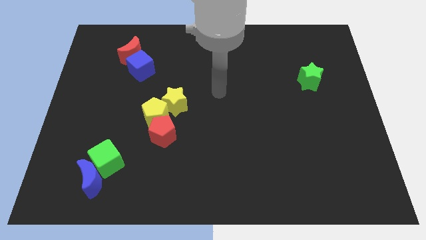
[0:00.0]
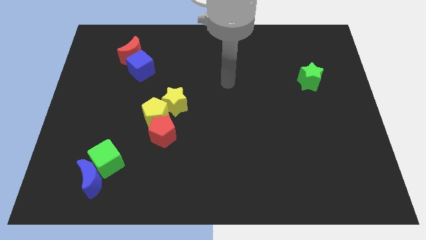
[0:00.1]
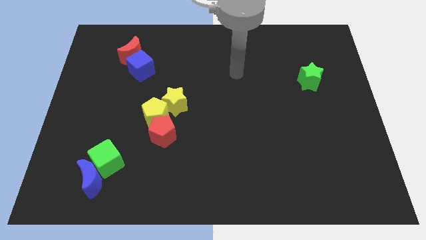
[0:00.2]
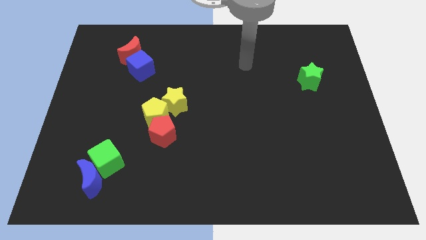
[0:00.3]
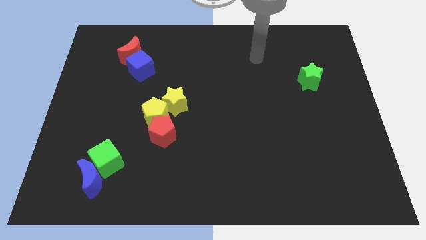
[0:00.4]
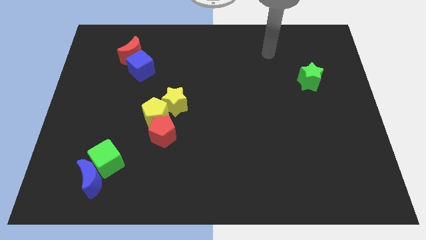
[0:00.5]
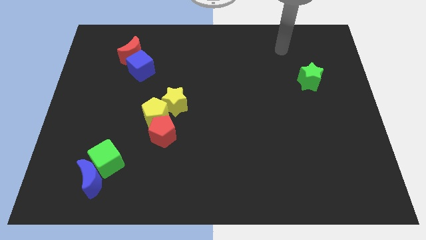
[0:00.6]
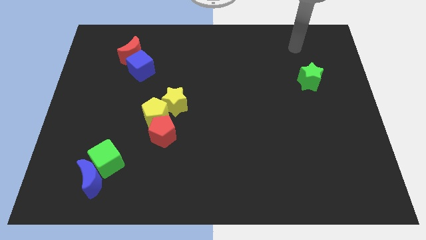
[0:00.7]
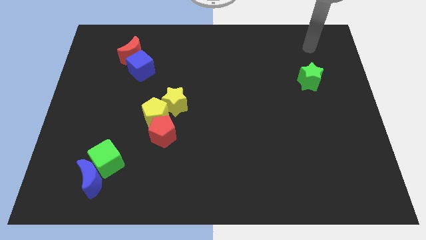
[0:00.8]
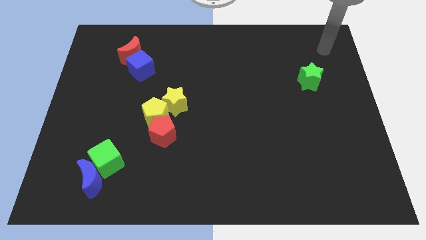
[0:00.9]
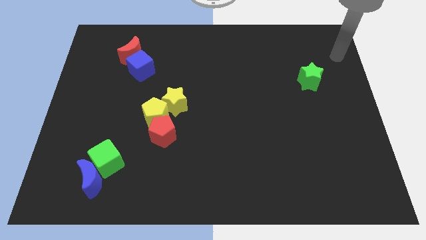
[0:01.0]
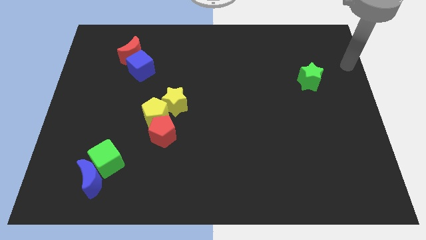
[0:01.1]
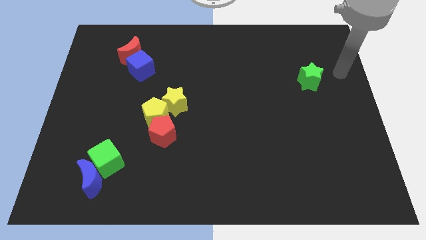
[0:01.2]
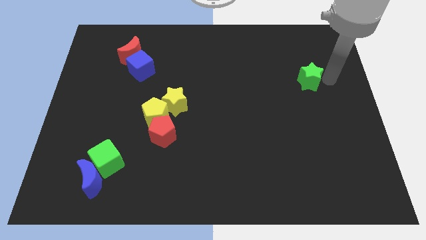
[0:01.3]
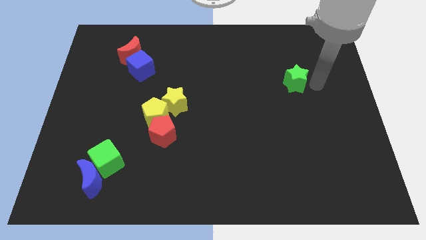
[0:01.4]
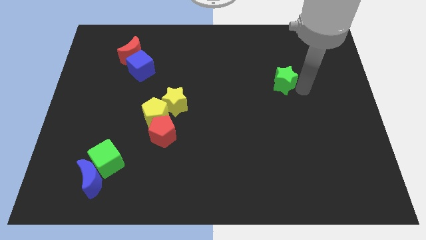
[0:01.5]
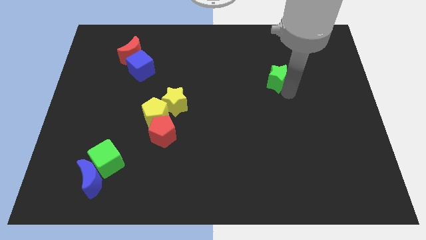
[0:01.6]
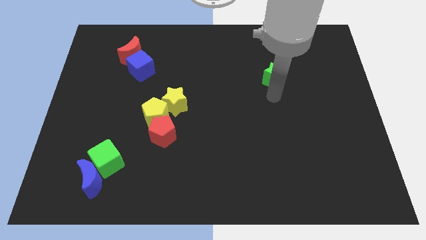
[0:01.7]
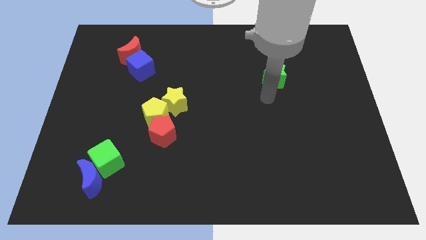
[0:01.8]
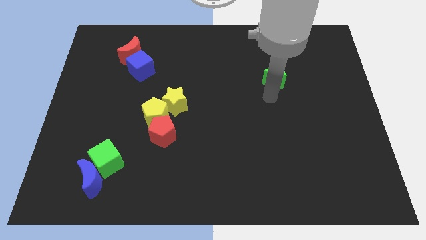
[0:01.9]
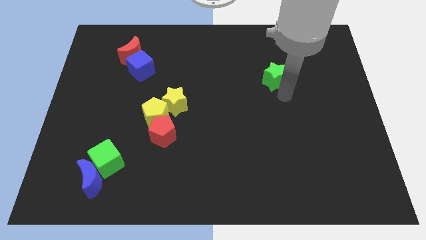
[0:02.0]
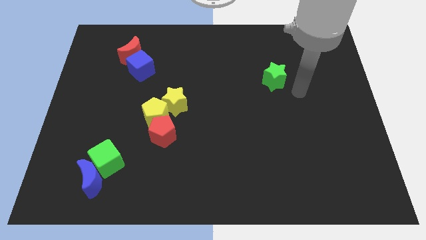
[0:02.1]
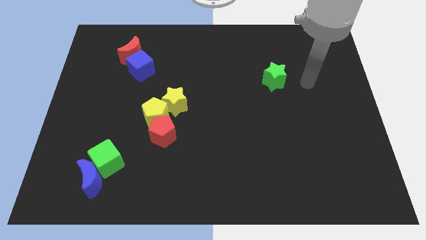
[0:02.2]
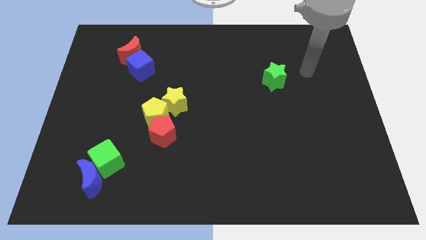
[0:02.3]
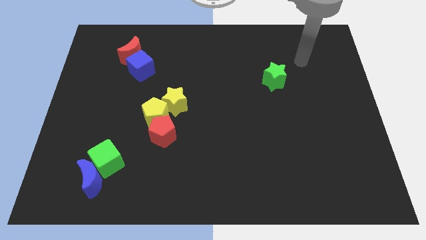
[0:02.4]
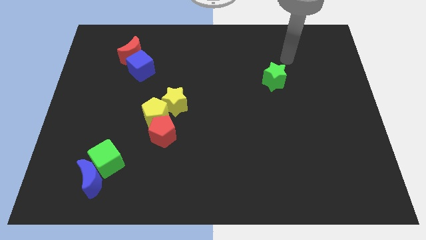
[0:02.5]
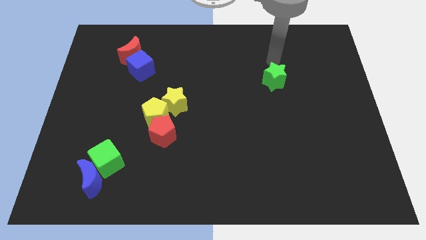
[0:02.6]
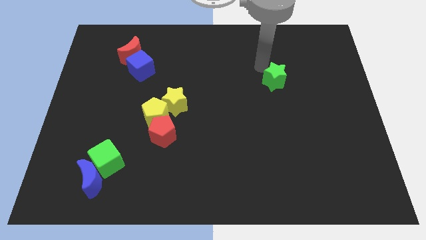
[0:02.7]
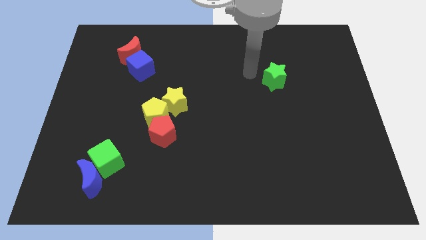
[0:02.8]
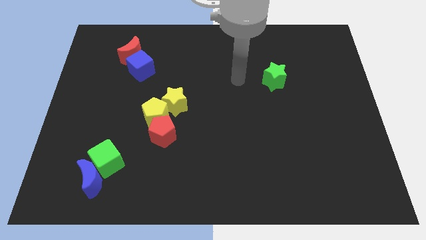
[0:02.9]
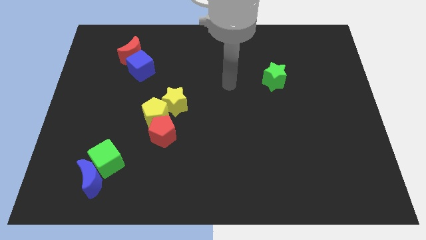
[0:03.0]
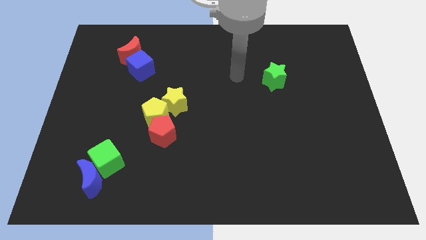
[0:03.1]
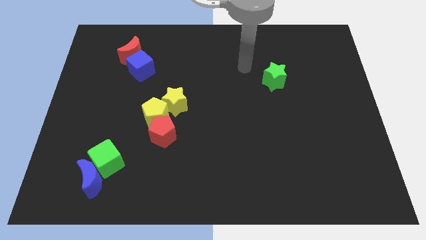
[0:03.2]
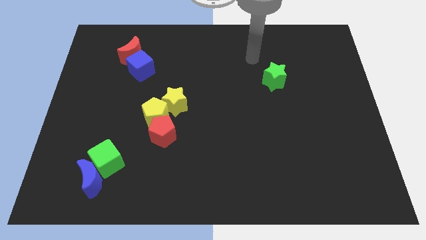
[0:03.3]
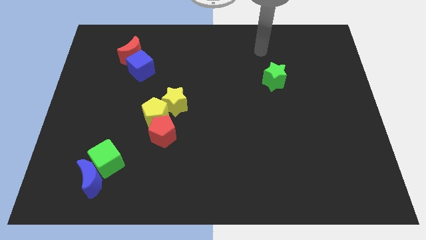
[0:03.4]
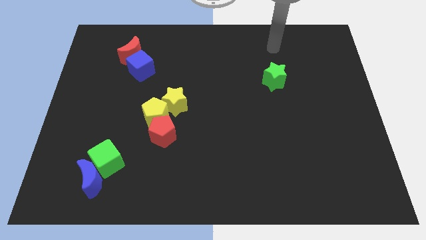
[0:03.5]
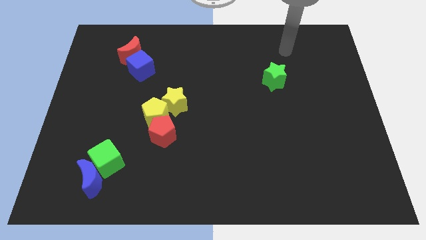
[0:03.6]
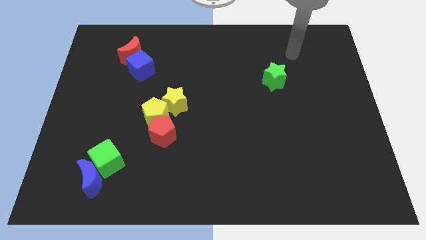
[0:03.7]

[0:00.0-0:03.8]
move the arm over the green star

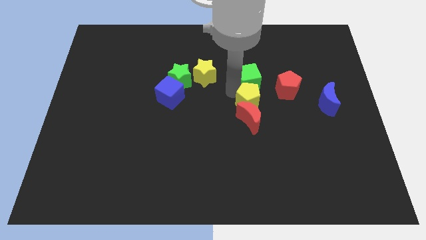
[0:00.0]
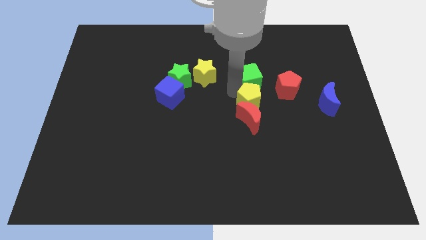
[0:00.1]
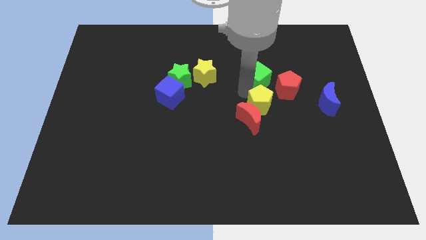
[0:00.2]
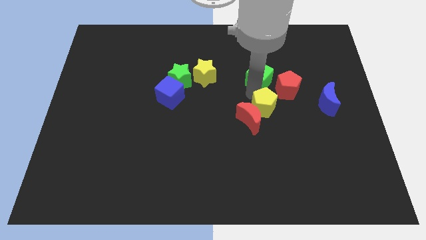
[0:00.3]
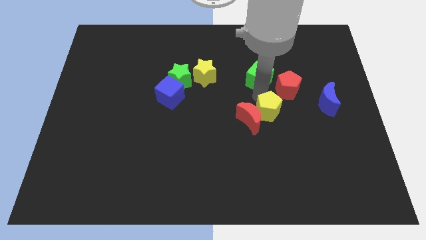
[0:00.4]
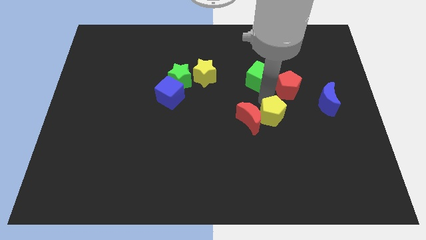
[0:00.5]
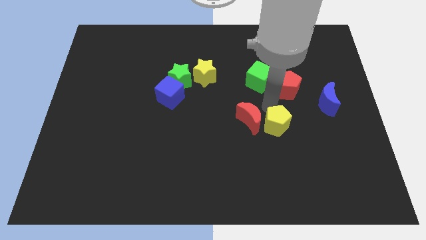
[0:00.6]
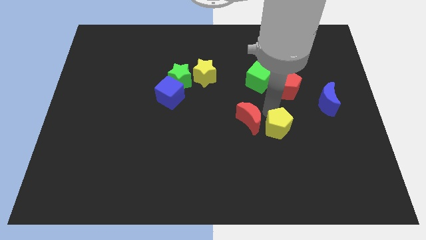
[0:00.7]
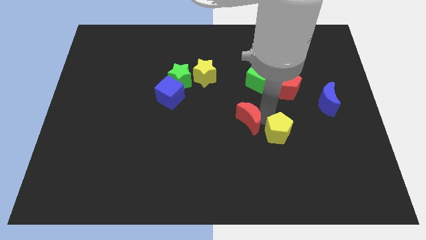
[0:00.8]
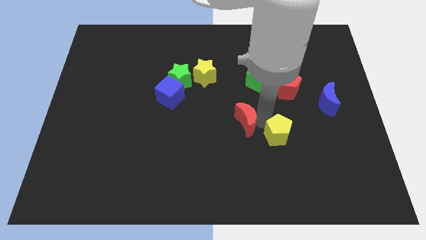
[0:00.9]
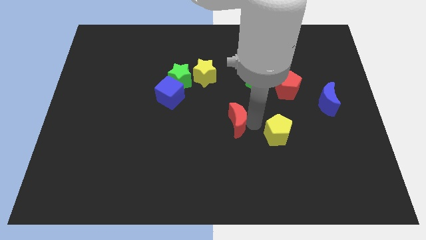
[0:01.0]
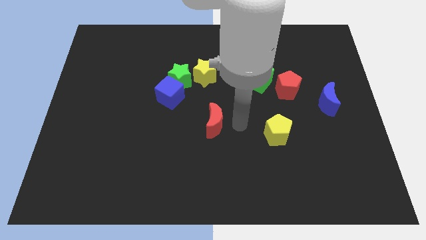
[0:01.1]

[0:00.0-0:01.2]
place yellow pentagon to the right of red moon

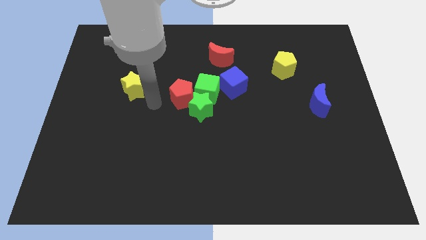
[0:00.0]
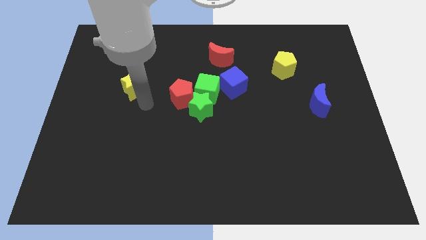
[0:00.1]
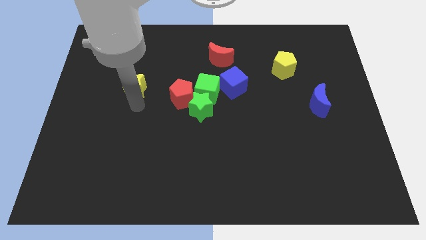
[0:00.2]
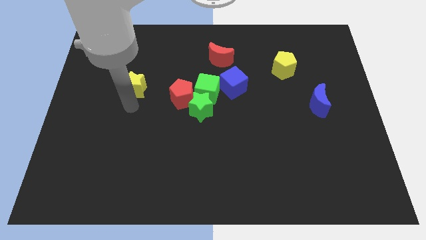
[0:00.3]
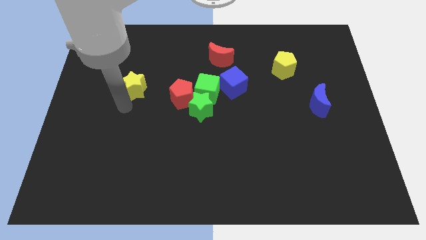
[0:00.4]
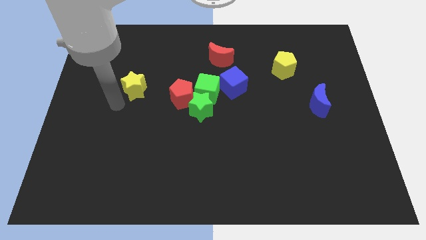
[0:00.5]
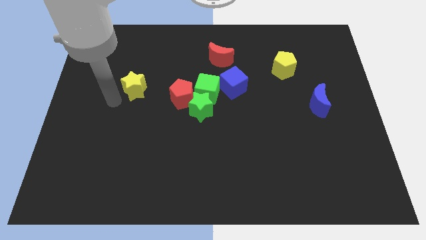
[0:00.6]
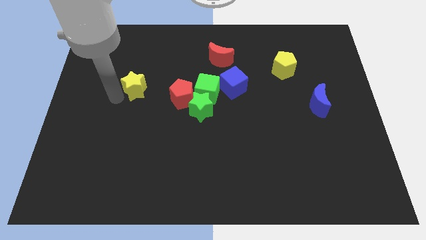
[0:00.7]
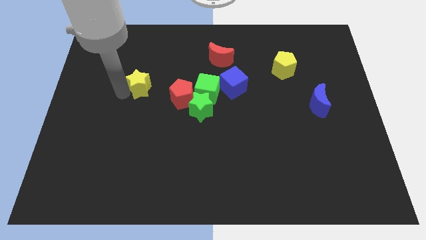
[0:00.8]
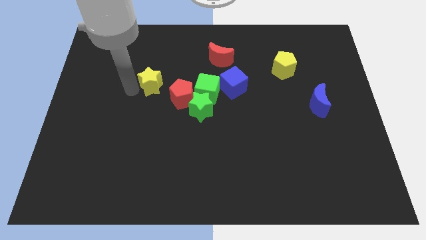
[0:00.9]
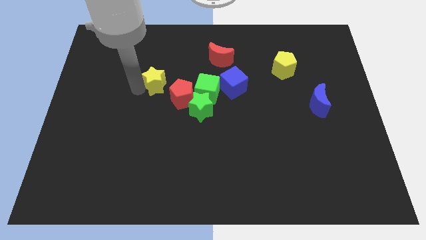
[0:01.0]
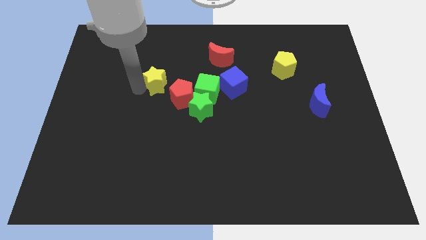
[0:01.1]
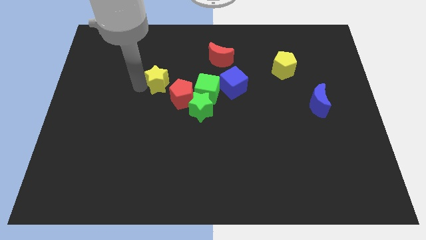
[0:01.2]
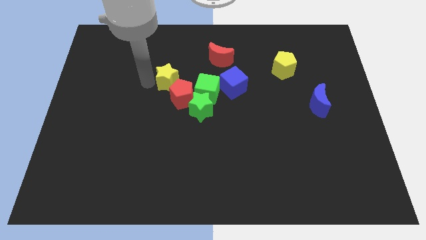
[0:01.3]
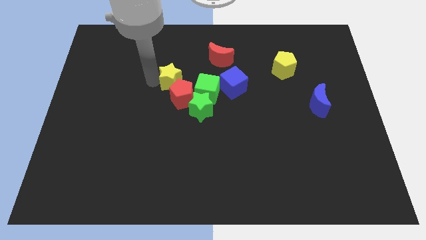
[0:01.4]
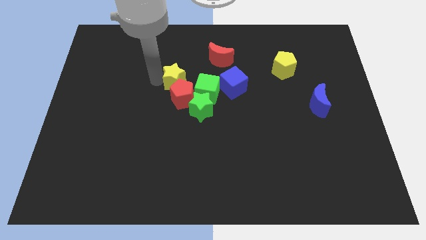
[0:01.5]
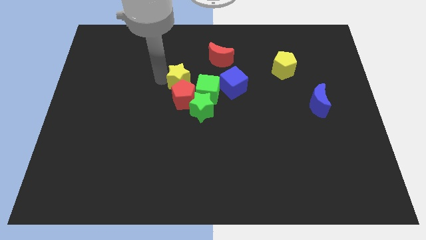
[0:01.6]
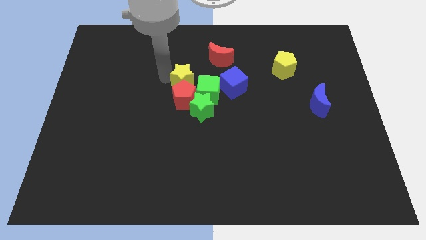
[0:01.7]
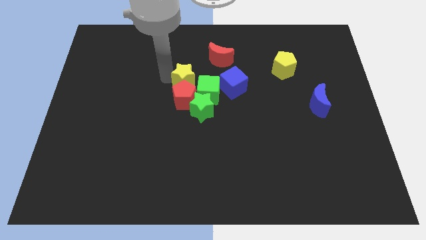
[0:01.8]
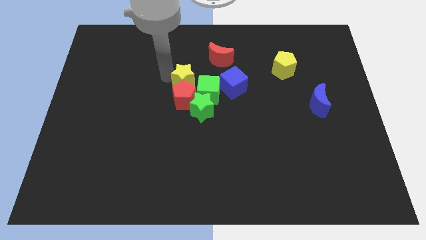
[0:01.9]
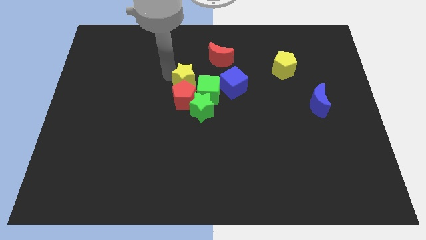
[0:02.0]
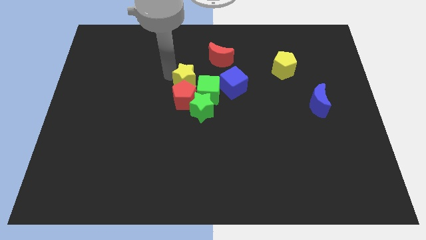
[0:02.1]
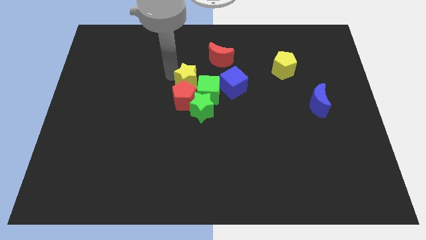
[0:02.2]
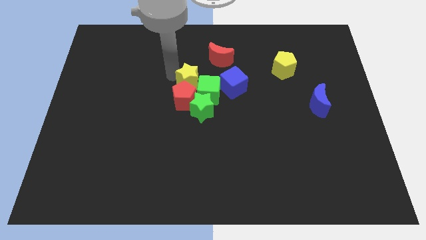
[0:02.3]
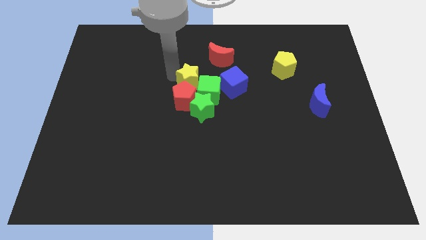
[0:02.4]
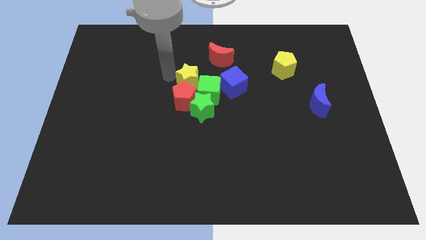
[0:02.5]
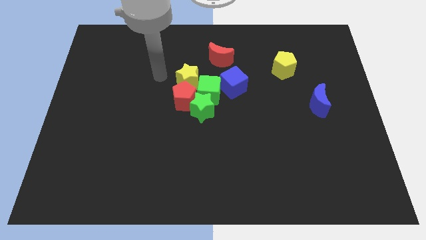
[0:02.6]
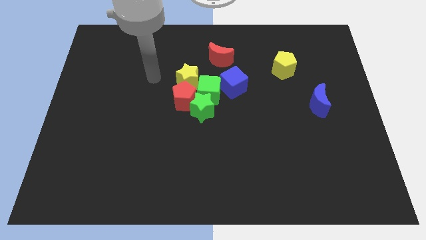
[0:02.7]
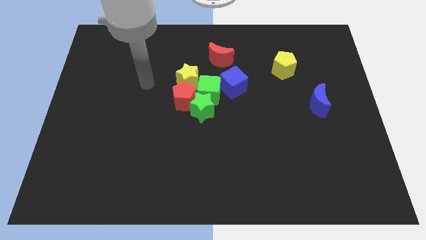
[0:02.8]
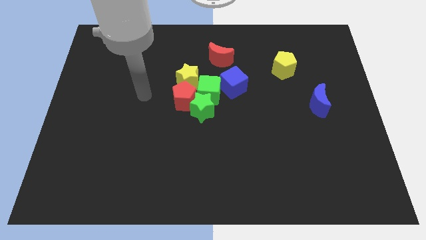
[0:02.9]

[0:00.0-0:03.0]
push the yellow star into the group of blocks

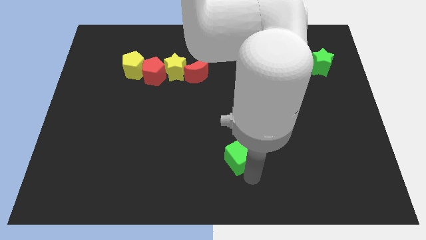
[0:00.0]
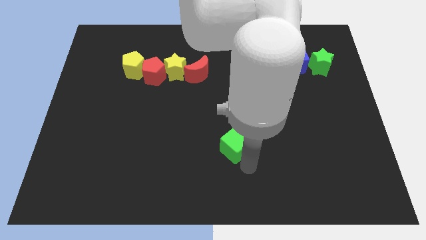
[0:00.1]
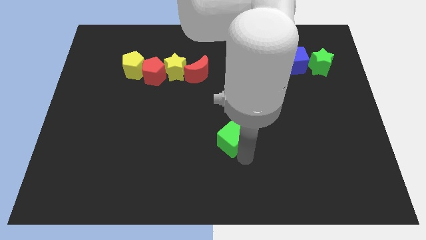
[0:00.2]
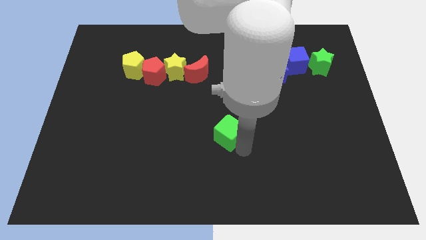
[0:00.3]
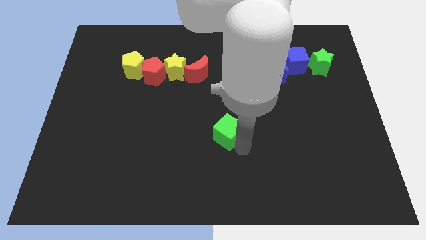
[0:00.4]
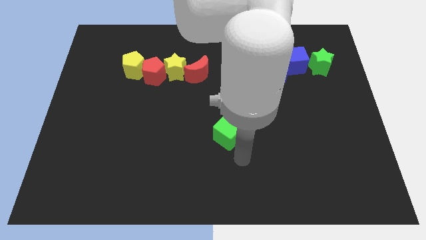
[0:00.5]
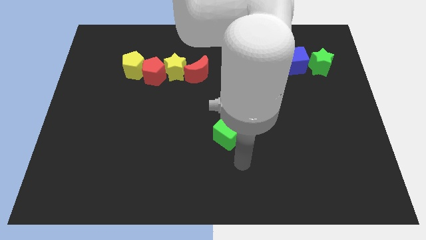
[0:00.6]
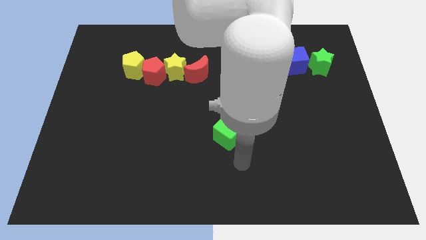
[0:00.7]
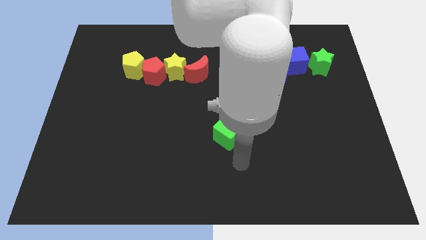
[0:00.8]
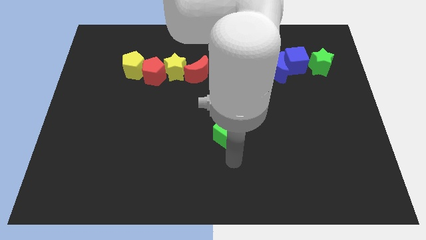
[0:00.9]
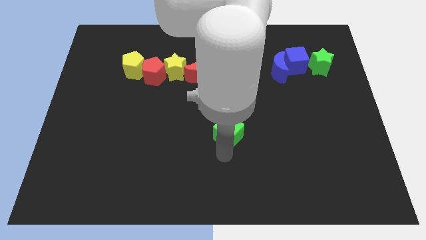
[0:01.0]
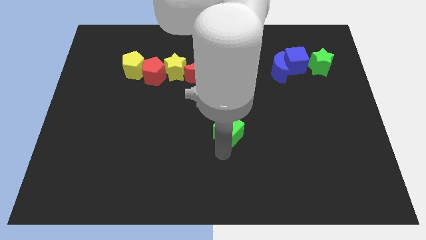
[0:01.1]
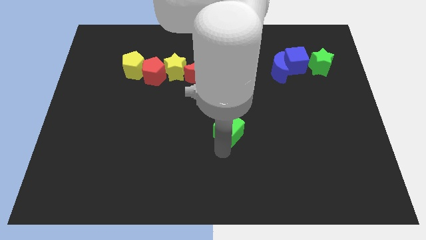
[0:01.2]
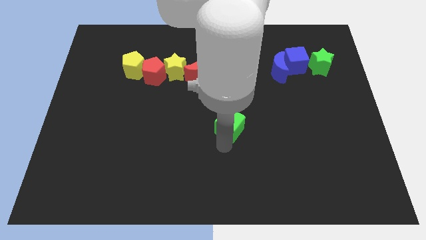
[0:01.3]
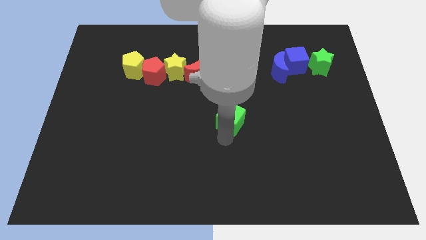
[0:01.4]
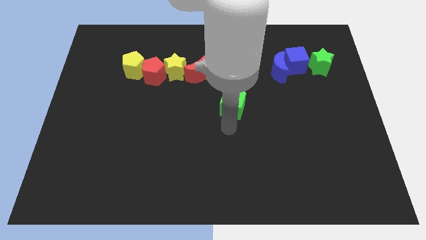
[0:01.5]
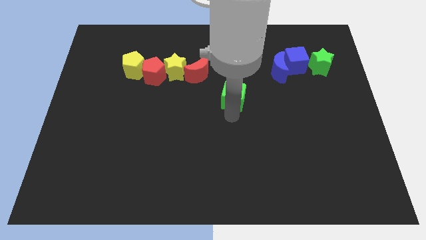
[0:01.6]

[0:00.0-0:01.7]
place green cube slightly towards upwards
